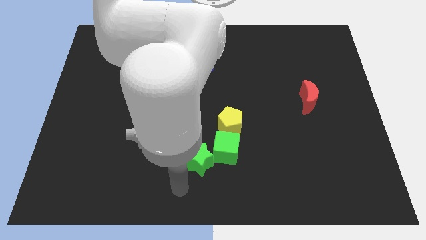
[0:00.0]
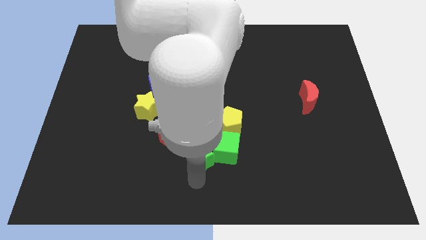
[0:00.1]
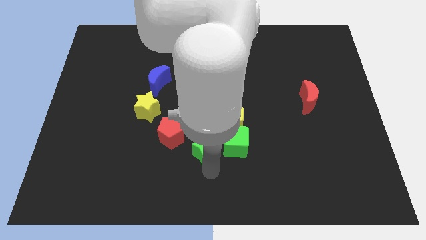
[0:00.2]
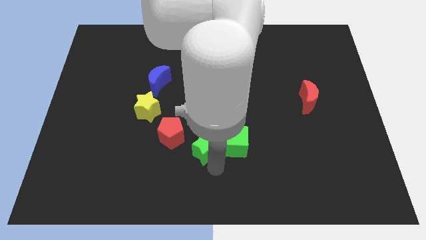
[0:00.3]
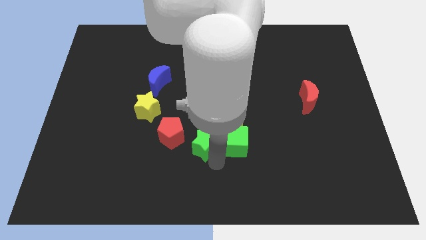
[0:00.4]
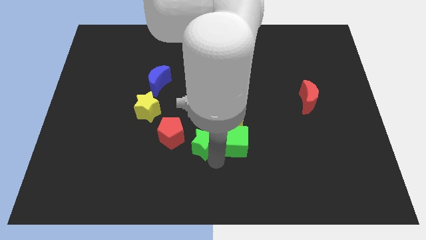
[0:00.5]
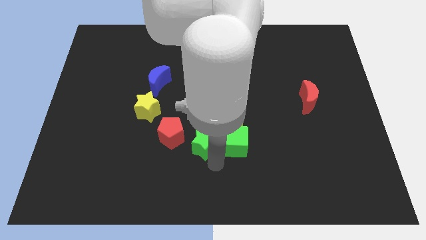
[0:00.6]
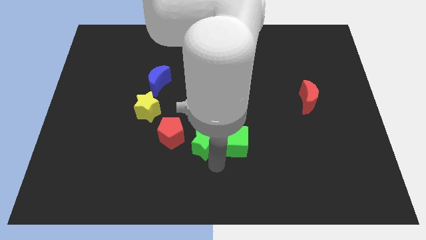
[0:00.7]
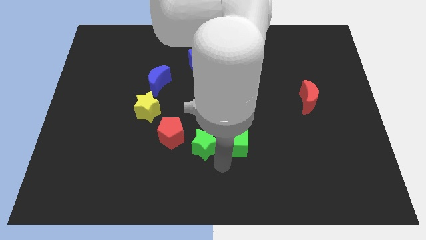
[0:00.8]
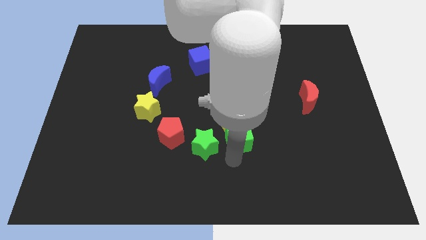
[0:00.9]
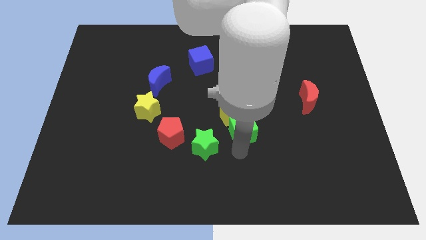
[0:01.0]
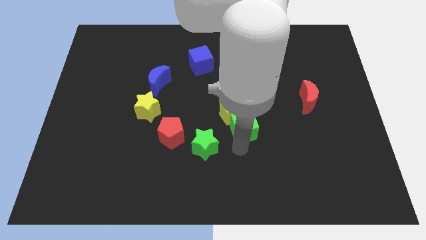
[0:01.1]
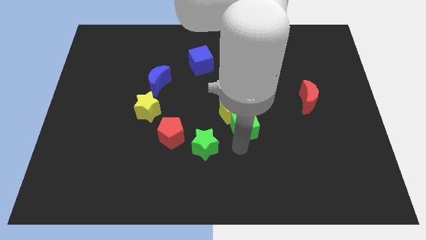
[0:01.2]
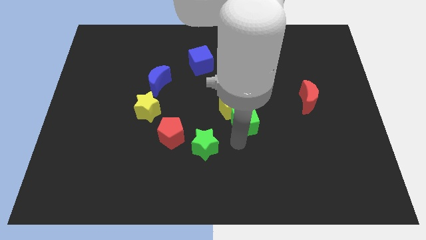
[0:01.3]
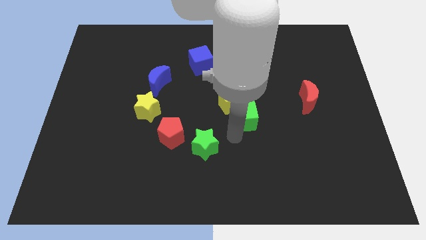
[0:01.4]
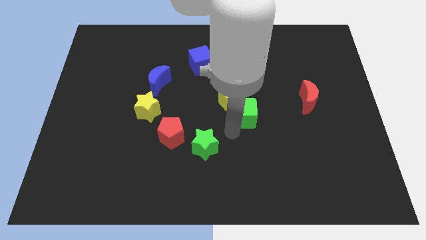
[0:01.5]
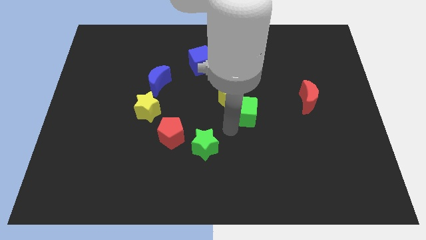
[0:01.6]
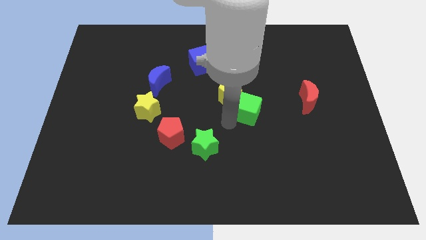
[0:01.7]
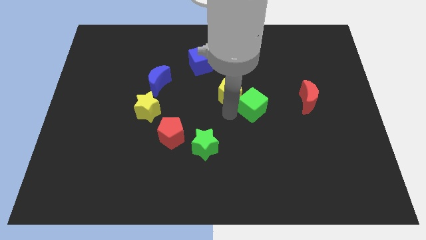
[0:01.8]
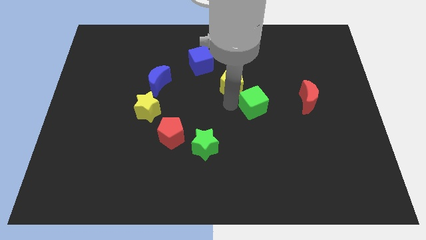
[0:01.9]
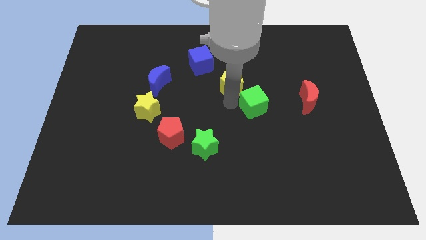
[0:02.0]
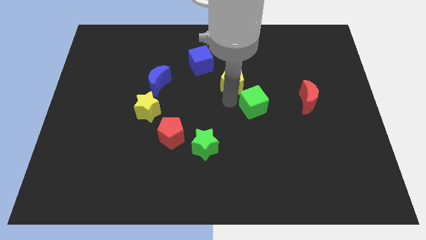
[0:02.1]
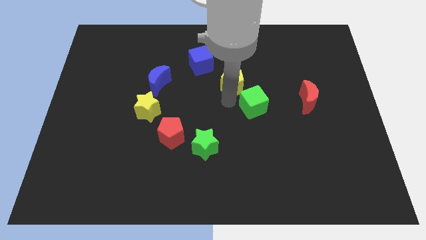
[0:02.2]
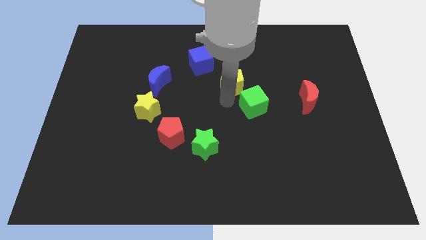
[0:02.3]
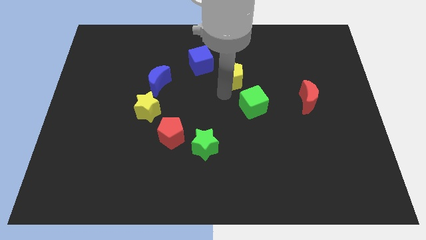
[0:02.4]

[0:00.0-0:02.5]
place the green cube left to the red moon

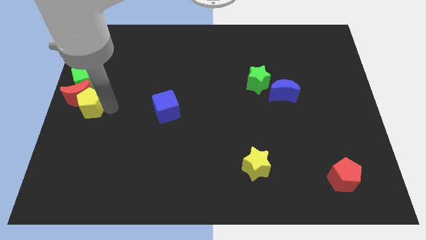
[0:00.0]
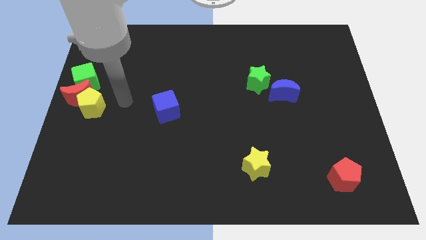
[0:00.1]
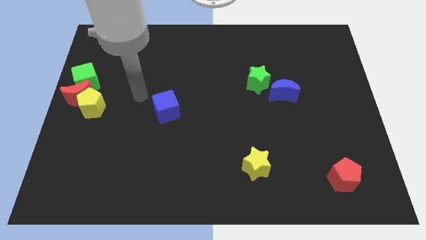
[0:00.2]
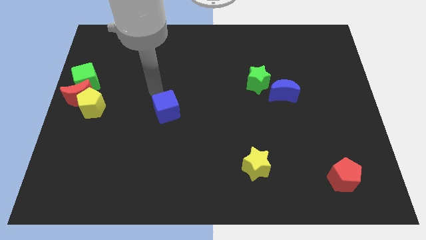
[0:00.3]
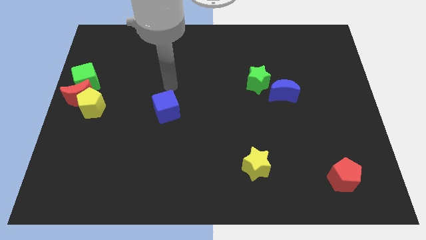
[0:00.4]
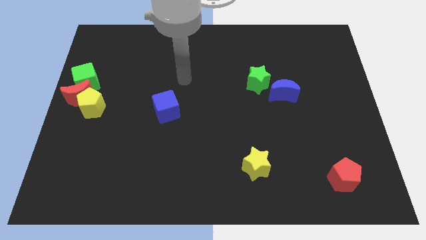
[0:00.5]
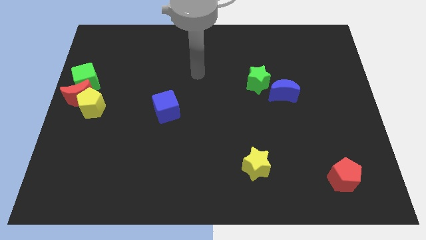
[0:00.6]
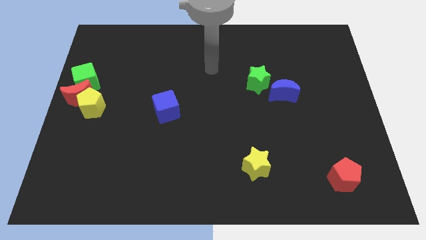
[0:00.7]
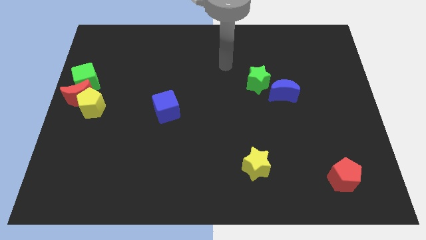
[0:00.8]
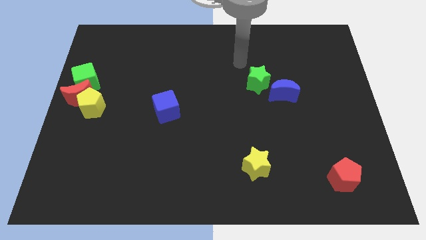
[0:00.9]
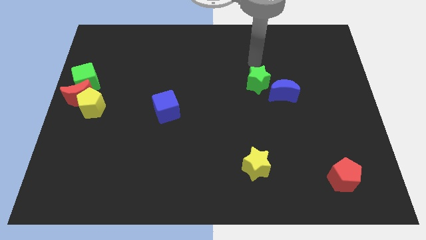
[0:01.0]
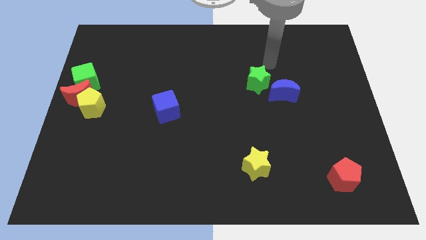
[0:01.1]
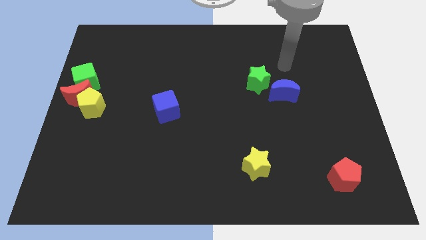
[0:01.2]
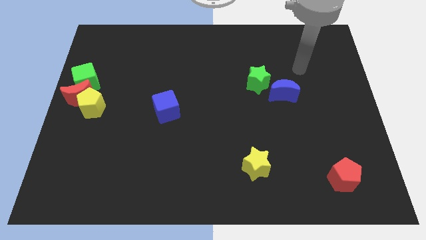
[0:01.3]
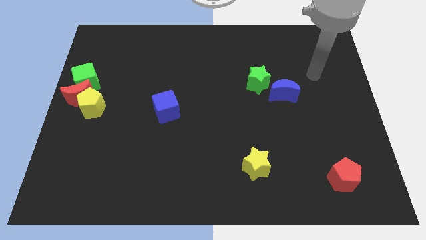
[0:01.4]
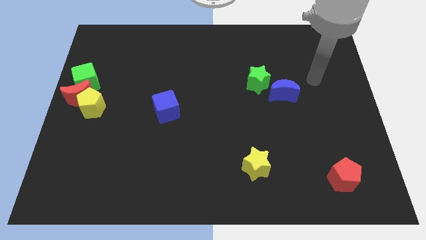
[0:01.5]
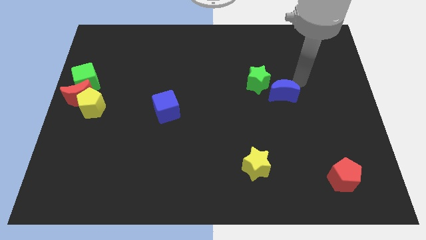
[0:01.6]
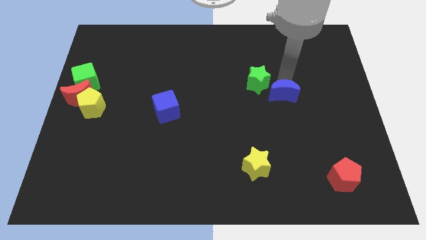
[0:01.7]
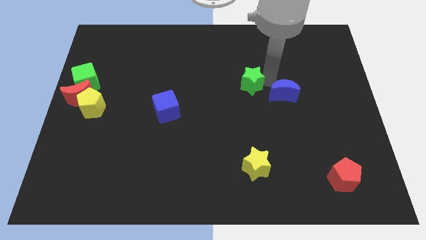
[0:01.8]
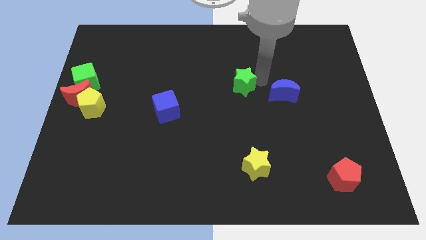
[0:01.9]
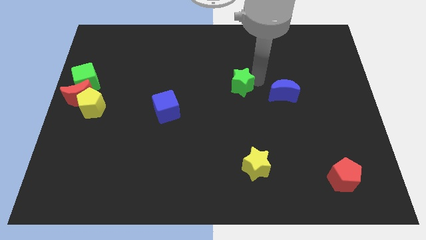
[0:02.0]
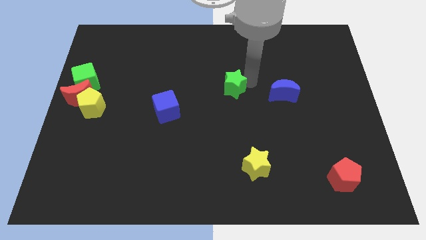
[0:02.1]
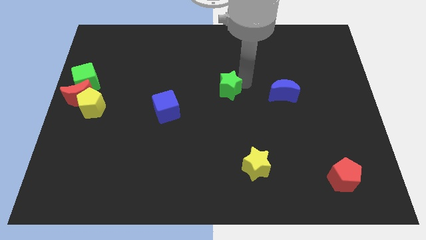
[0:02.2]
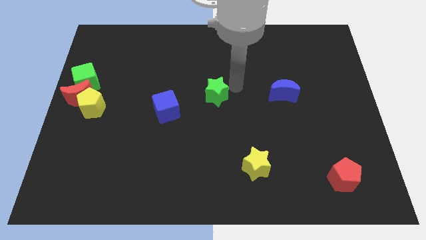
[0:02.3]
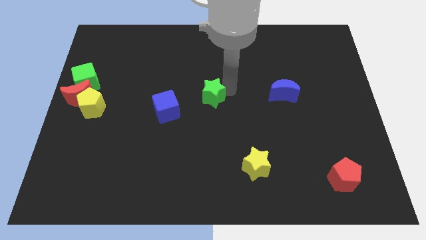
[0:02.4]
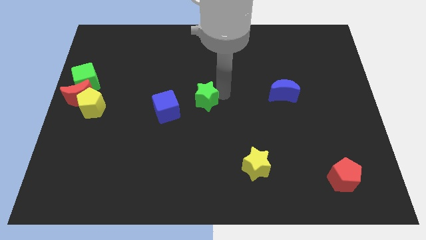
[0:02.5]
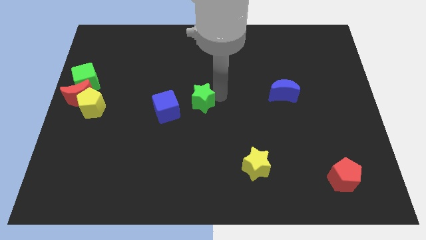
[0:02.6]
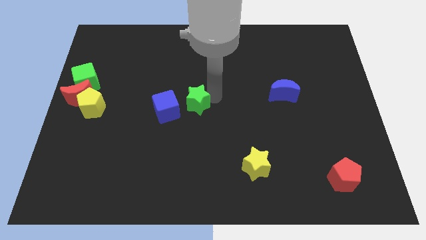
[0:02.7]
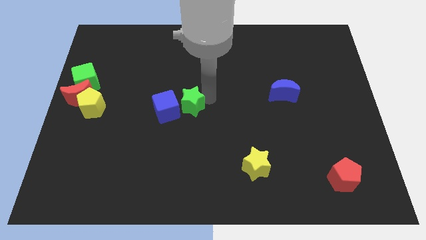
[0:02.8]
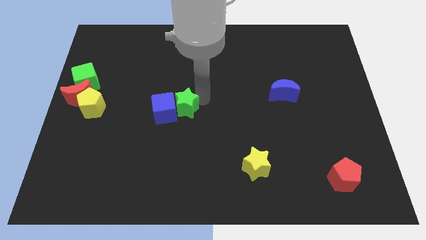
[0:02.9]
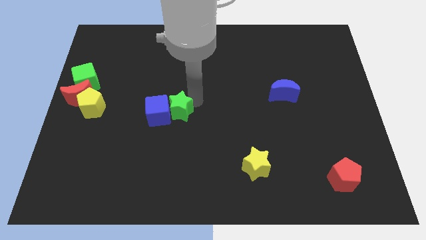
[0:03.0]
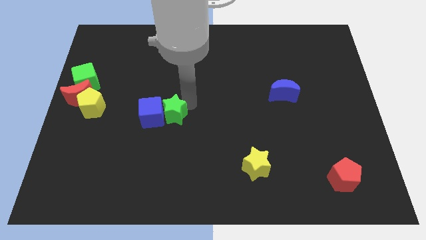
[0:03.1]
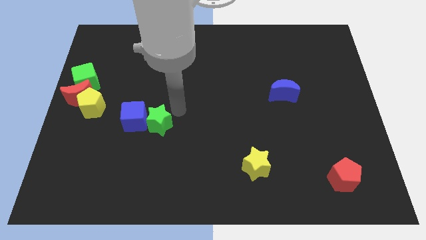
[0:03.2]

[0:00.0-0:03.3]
place green star to the right of blue cube

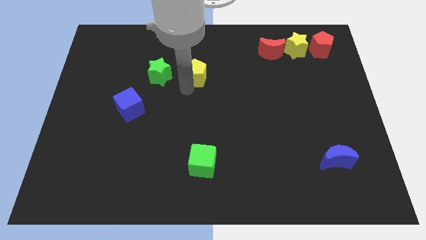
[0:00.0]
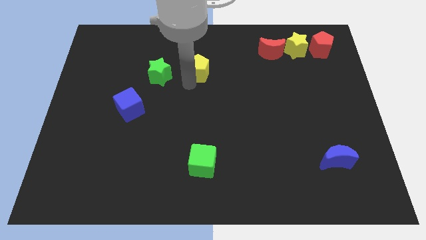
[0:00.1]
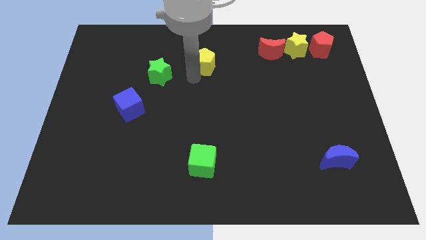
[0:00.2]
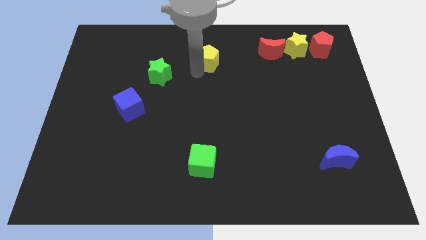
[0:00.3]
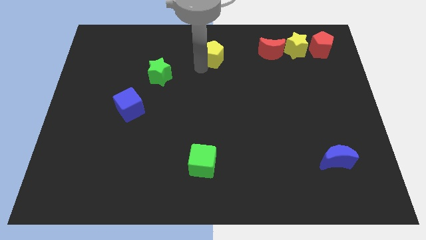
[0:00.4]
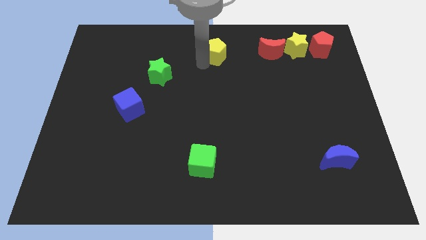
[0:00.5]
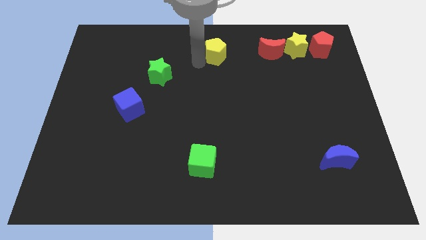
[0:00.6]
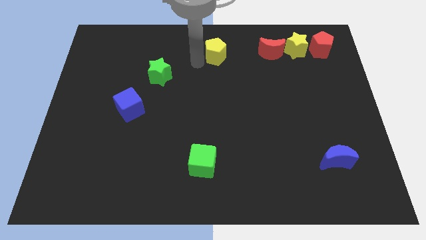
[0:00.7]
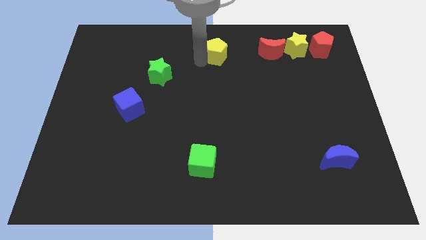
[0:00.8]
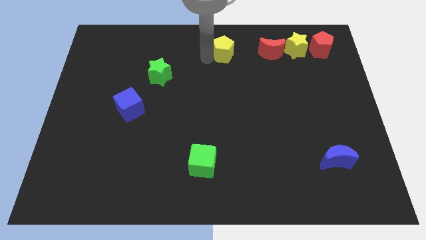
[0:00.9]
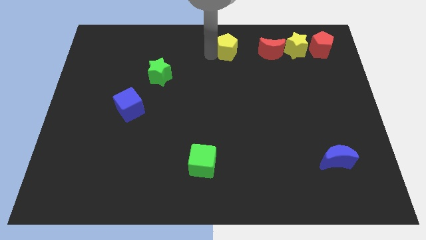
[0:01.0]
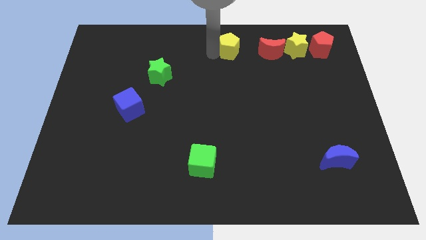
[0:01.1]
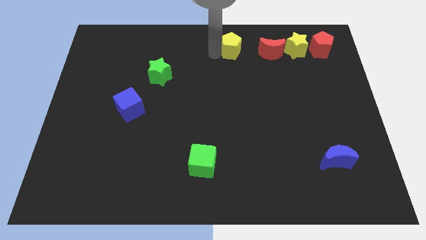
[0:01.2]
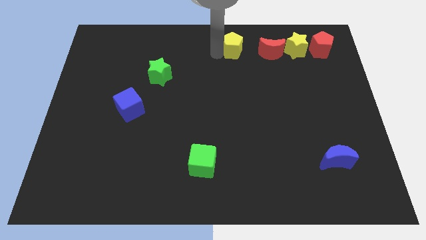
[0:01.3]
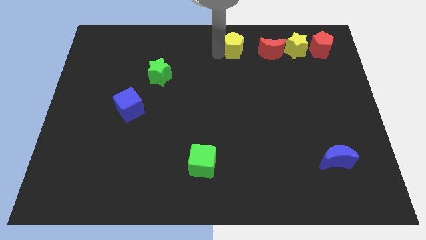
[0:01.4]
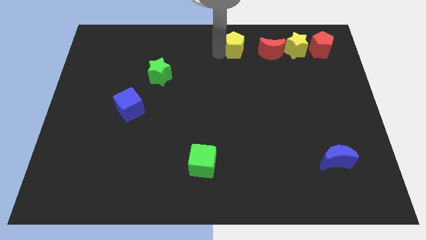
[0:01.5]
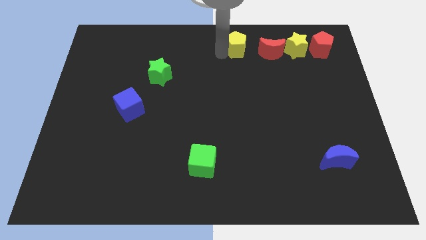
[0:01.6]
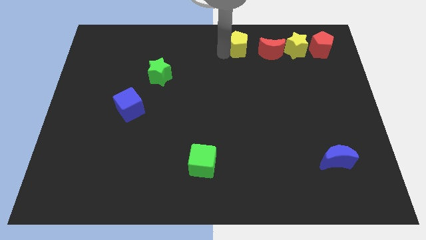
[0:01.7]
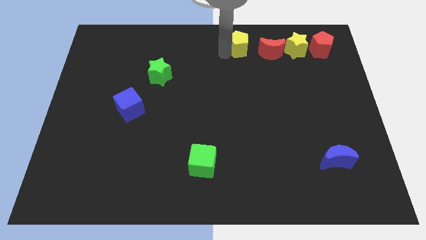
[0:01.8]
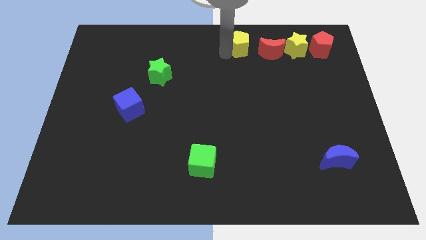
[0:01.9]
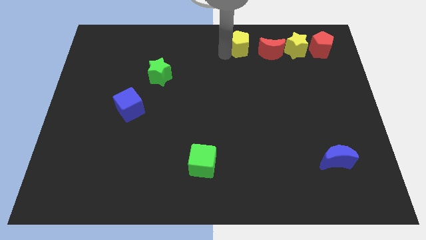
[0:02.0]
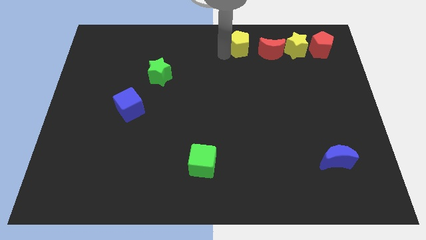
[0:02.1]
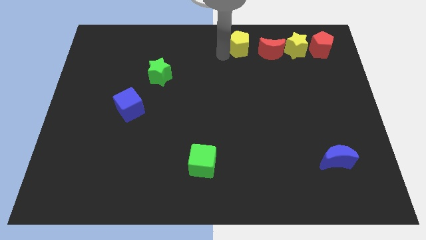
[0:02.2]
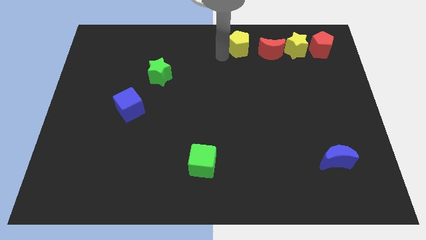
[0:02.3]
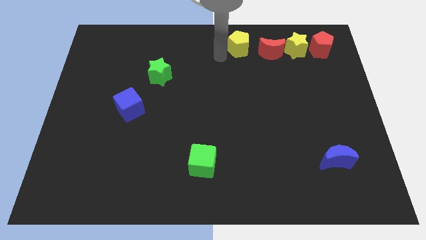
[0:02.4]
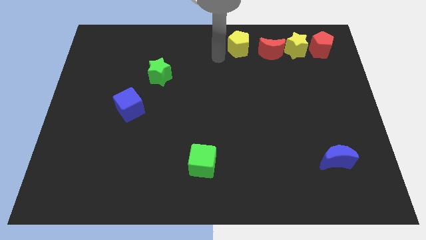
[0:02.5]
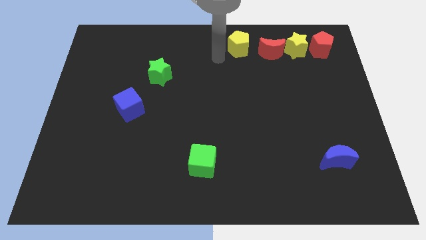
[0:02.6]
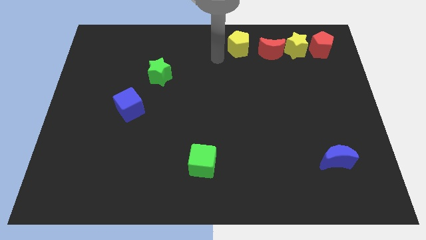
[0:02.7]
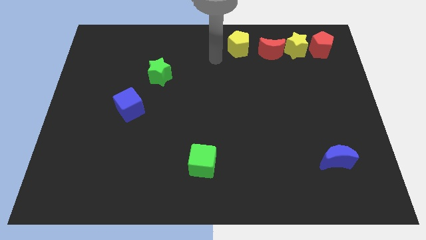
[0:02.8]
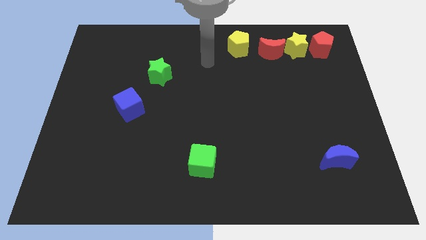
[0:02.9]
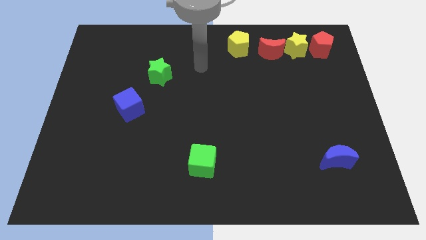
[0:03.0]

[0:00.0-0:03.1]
push the yellow pentagon at the left side of the horizontal line of blocks

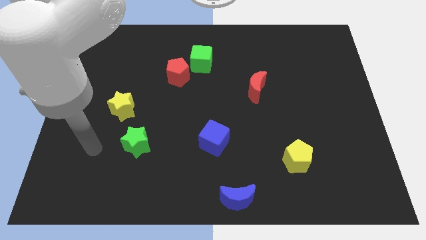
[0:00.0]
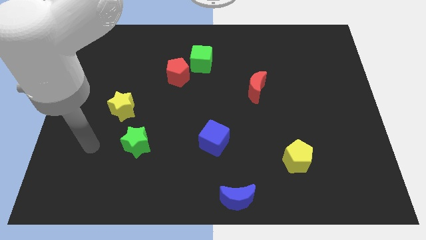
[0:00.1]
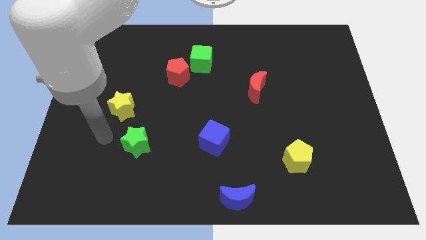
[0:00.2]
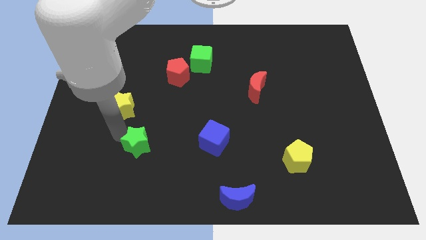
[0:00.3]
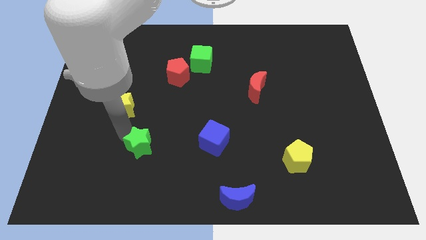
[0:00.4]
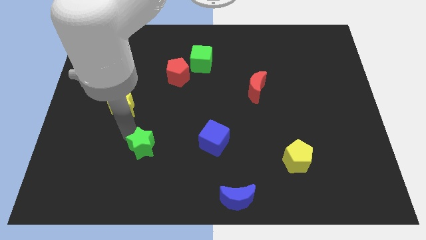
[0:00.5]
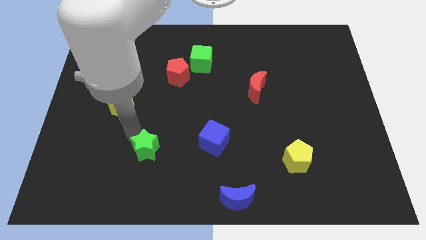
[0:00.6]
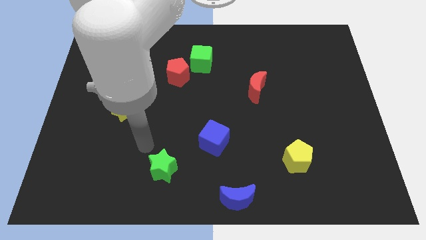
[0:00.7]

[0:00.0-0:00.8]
push green star slightly downwards
